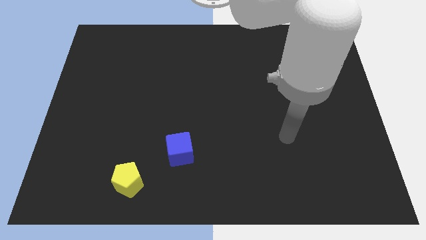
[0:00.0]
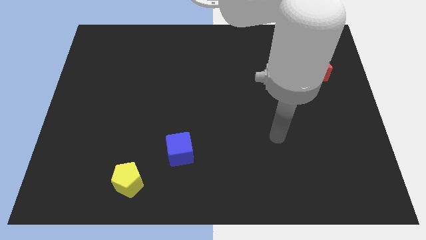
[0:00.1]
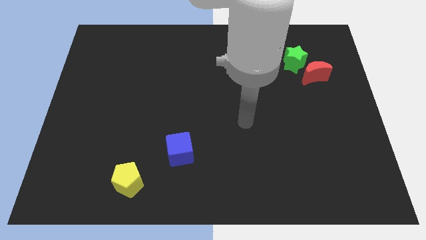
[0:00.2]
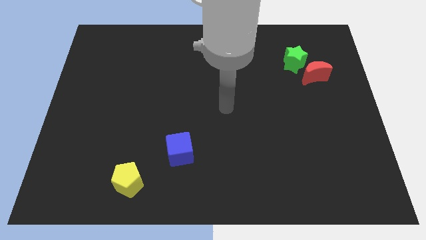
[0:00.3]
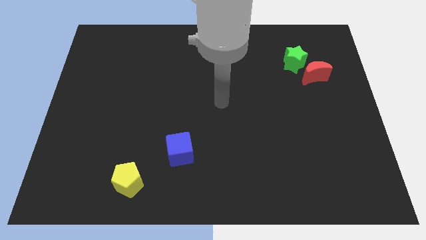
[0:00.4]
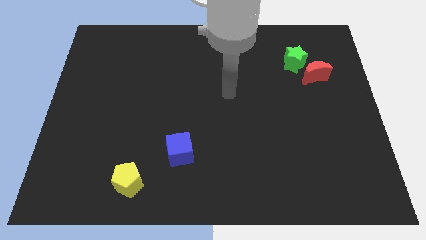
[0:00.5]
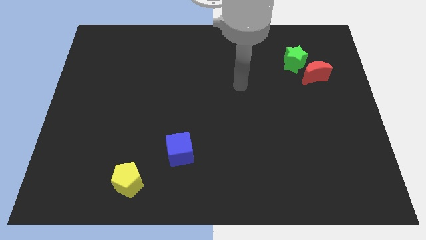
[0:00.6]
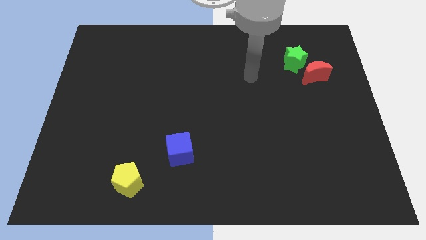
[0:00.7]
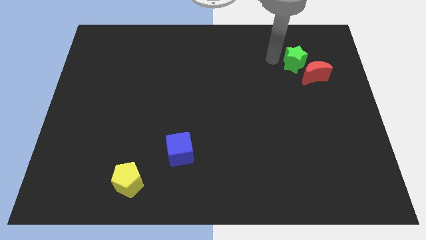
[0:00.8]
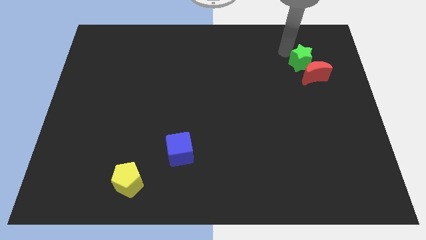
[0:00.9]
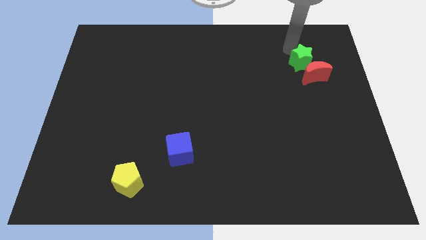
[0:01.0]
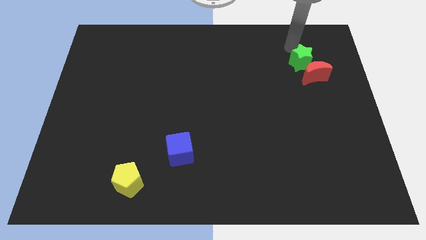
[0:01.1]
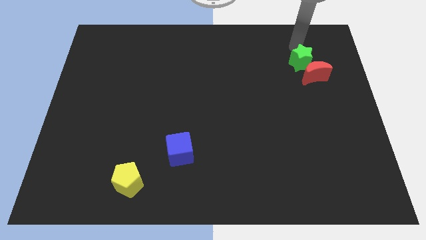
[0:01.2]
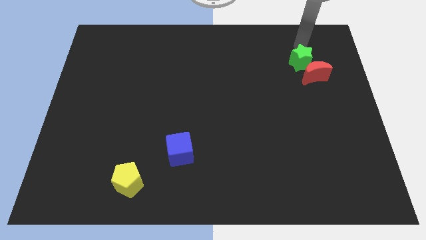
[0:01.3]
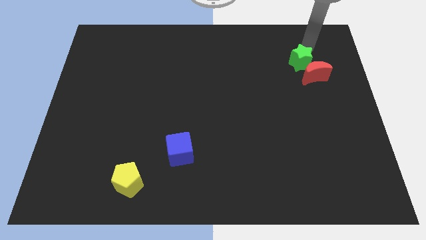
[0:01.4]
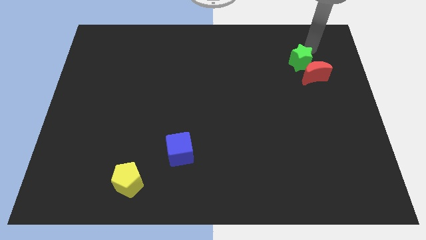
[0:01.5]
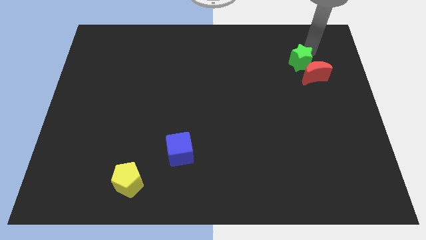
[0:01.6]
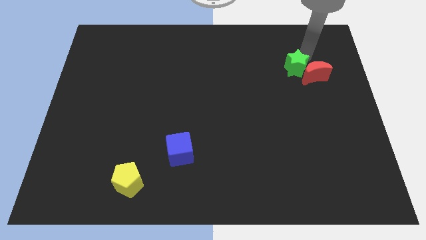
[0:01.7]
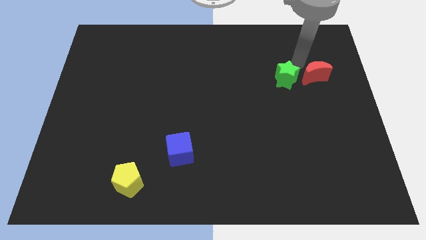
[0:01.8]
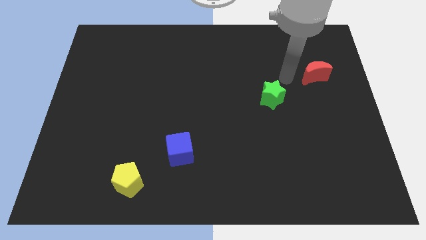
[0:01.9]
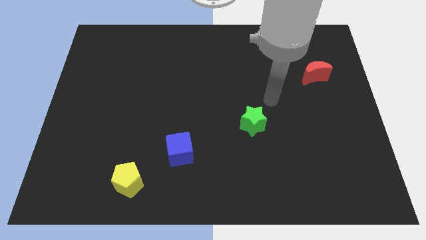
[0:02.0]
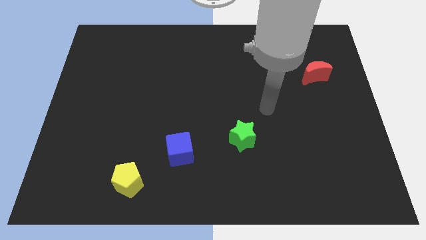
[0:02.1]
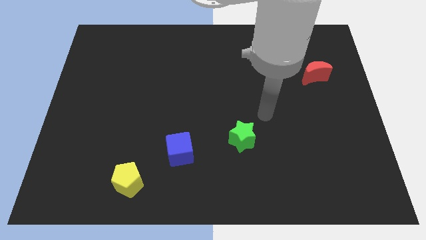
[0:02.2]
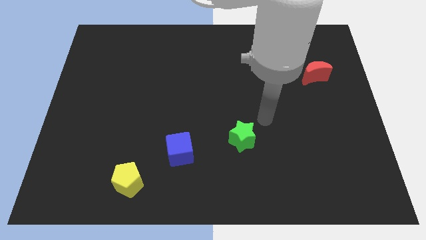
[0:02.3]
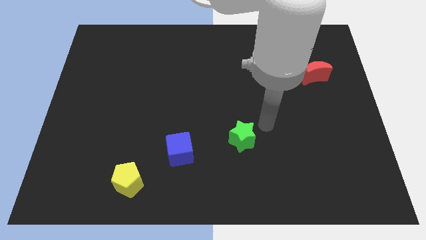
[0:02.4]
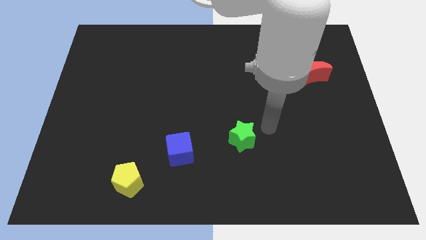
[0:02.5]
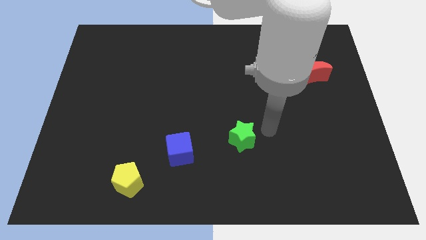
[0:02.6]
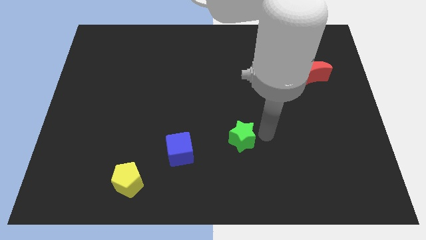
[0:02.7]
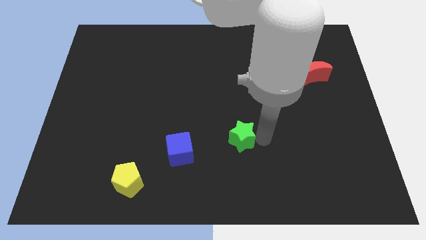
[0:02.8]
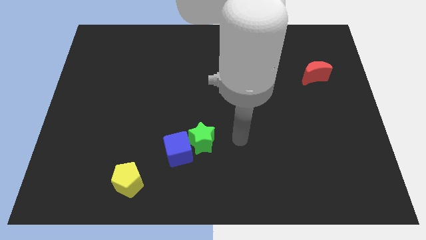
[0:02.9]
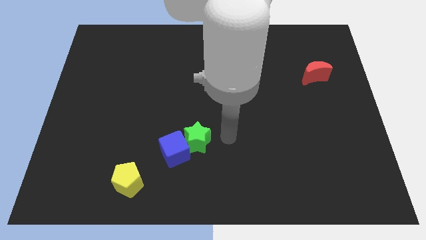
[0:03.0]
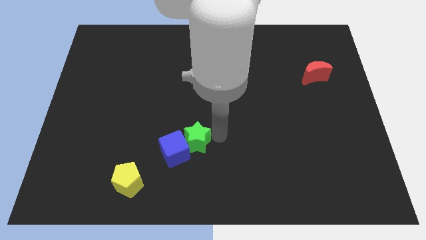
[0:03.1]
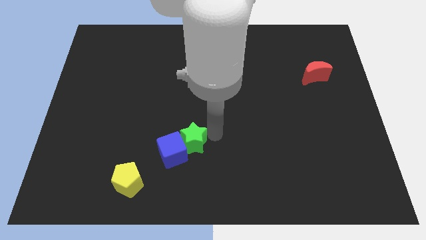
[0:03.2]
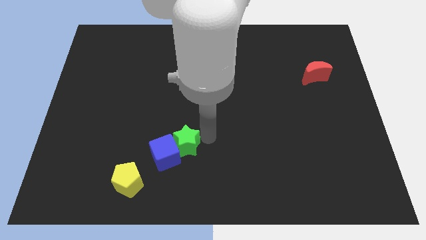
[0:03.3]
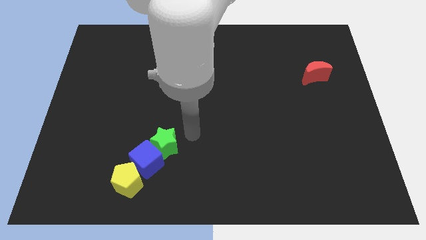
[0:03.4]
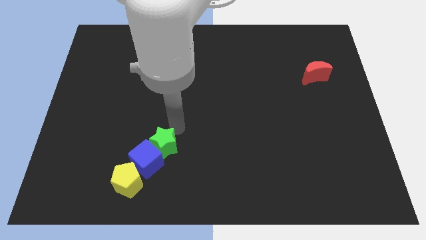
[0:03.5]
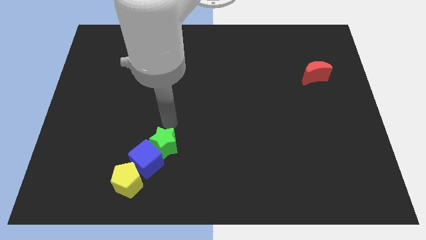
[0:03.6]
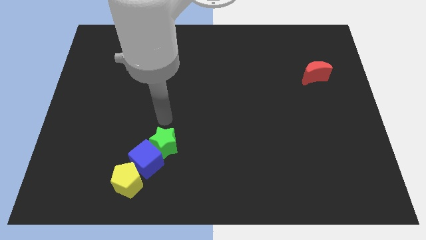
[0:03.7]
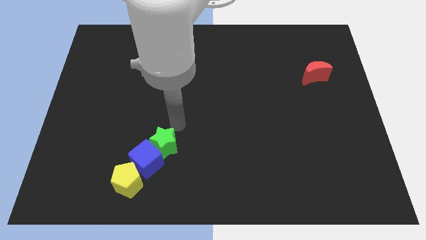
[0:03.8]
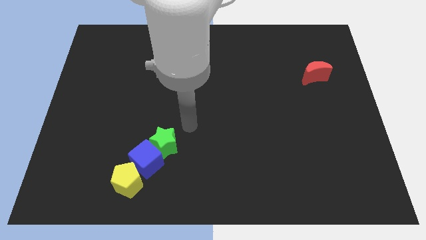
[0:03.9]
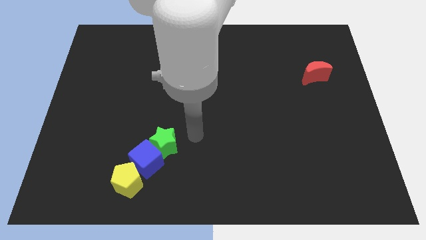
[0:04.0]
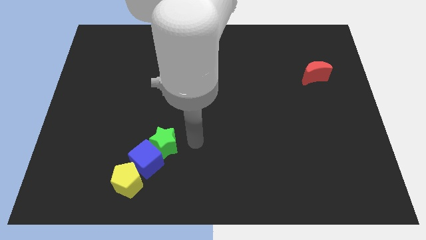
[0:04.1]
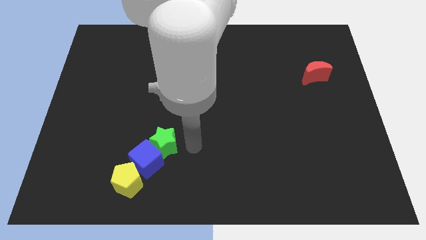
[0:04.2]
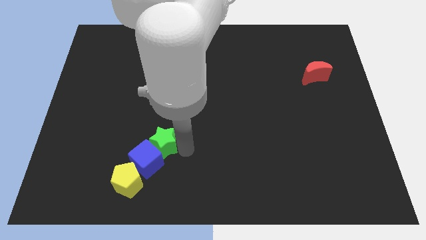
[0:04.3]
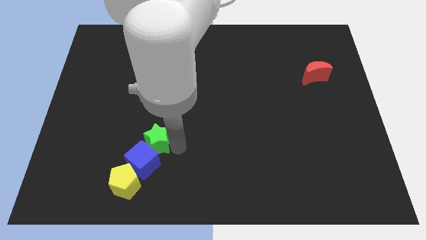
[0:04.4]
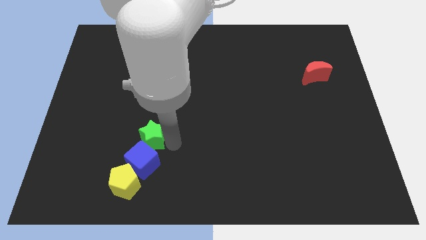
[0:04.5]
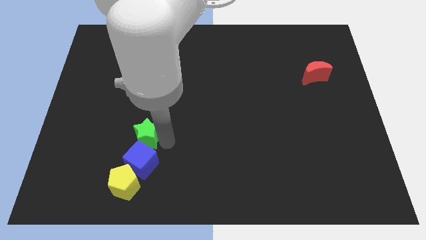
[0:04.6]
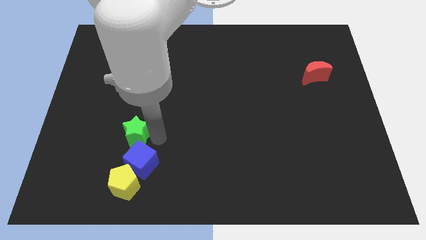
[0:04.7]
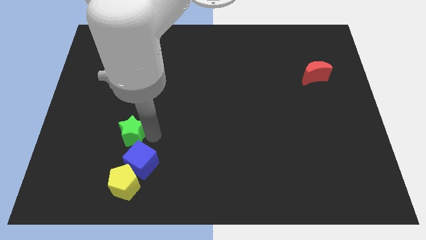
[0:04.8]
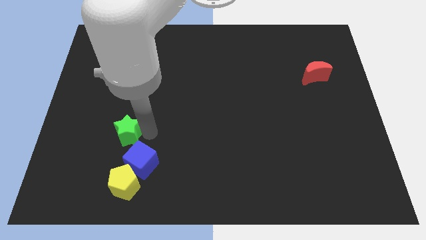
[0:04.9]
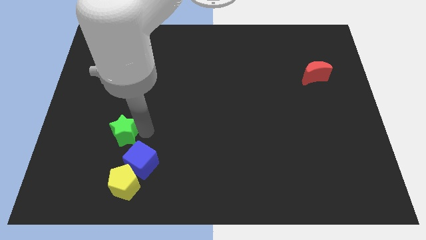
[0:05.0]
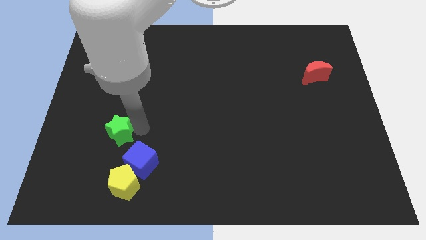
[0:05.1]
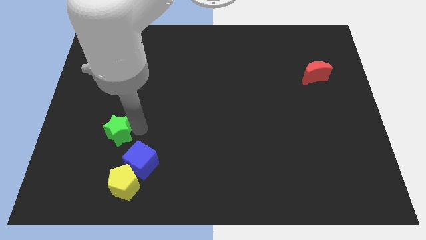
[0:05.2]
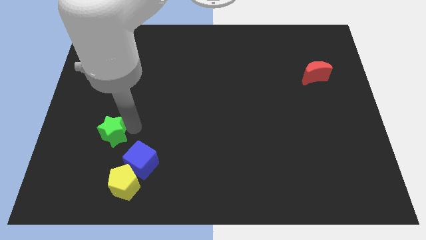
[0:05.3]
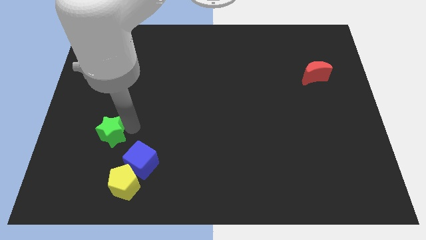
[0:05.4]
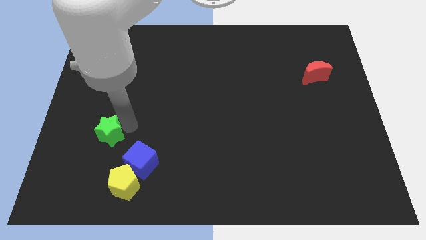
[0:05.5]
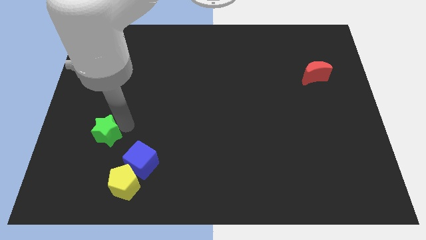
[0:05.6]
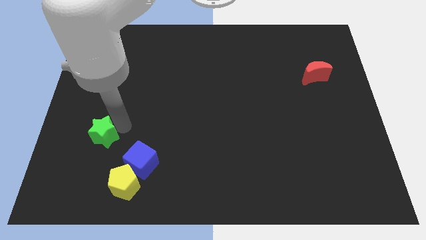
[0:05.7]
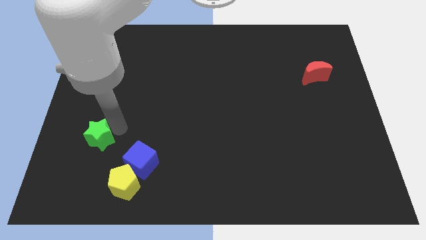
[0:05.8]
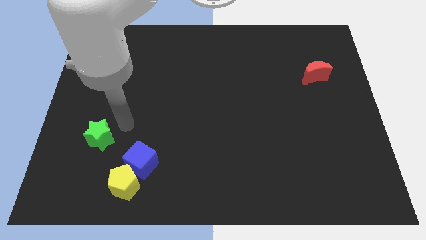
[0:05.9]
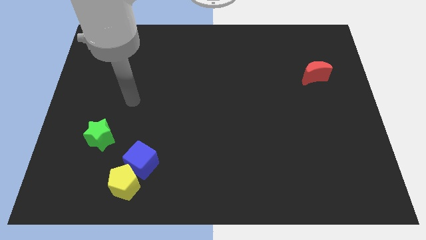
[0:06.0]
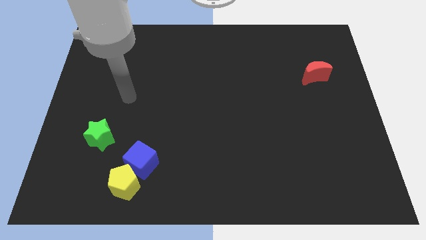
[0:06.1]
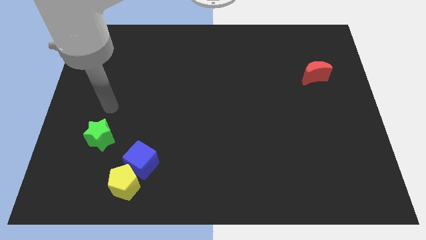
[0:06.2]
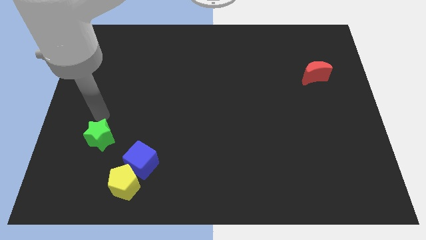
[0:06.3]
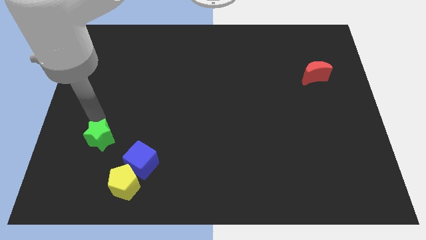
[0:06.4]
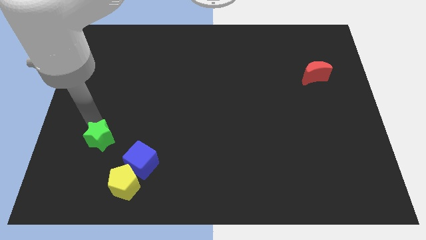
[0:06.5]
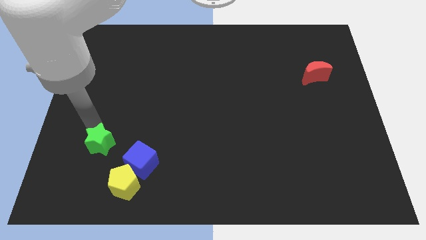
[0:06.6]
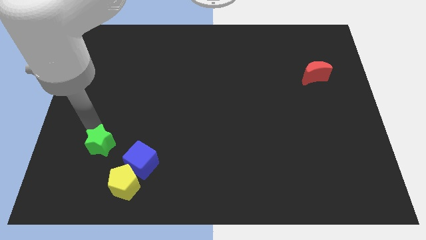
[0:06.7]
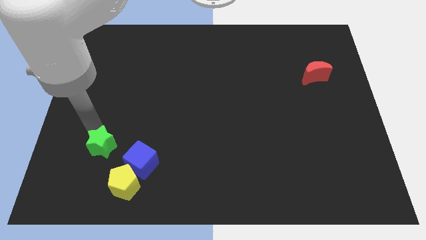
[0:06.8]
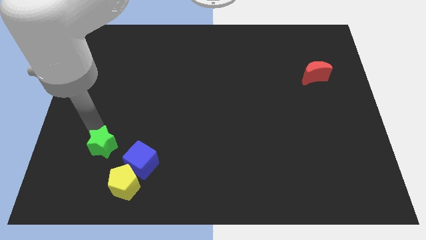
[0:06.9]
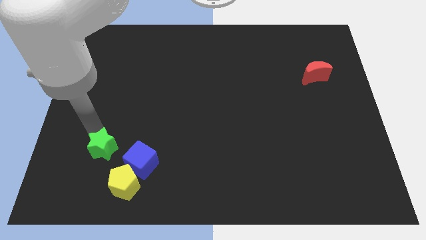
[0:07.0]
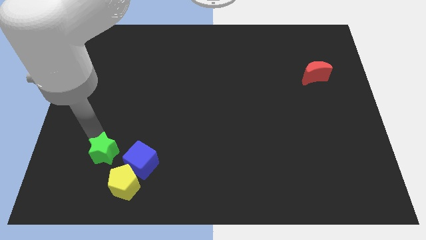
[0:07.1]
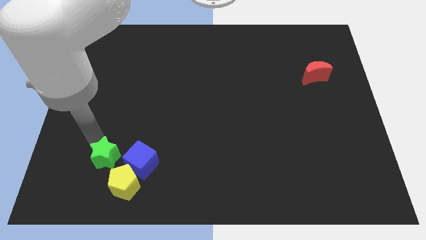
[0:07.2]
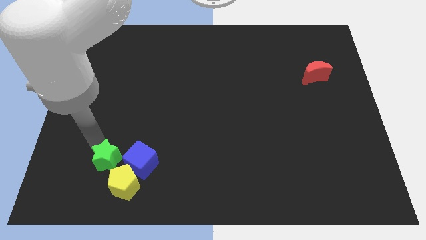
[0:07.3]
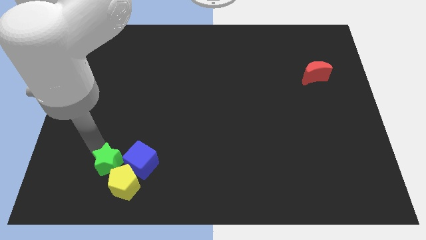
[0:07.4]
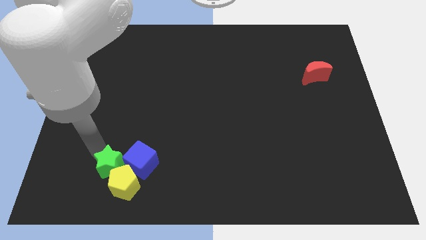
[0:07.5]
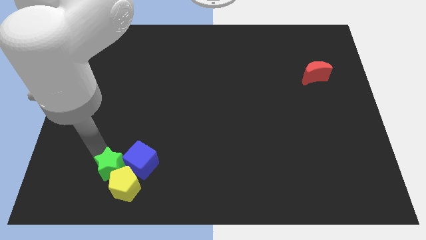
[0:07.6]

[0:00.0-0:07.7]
move the star next to the yellow block

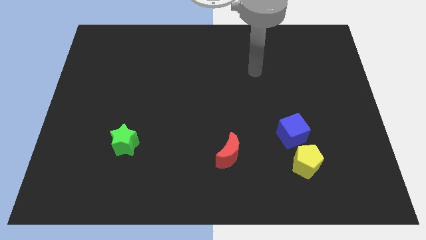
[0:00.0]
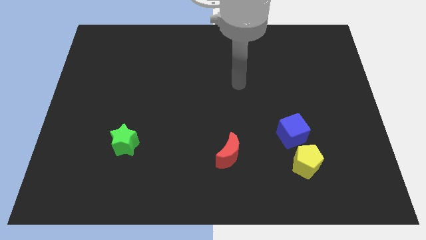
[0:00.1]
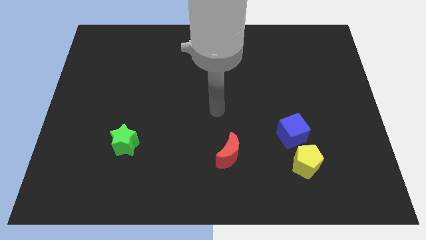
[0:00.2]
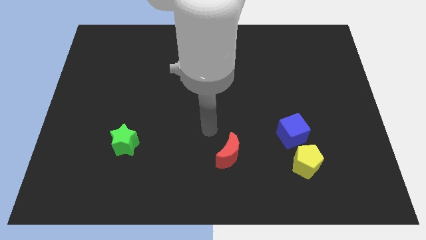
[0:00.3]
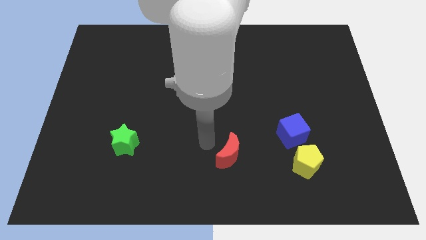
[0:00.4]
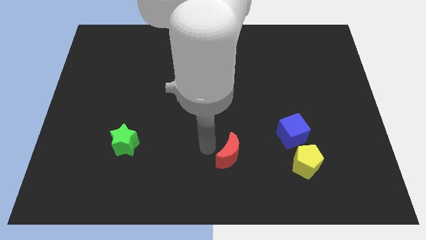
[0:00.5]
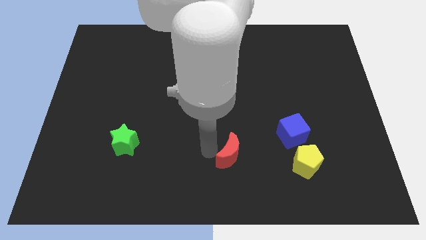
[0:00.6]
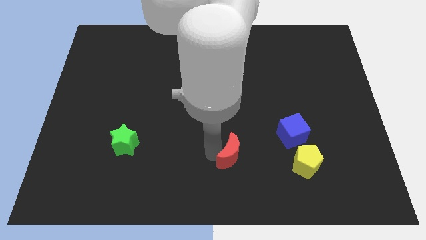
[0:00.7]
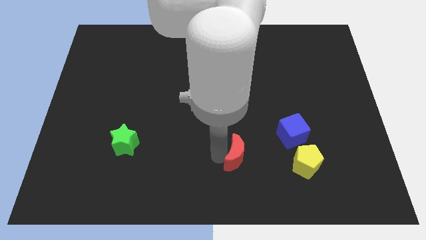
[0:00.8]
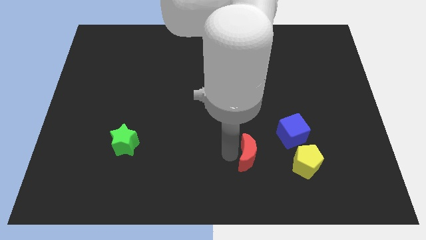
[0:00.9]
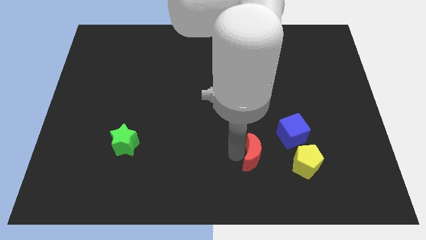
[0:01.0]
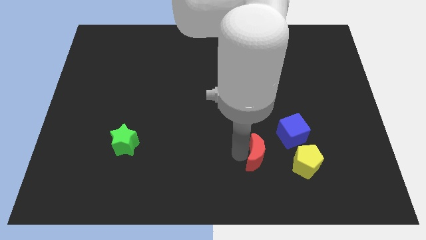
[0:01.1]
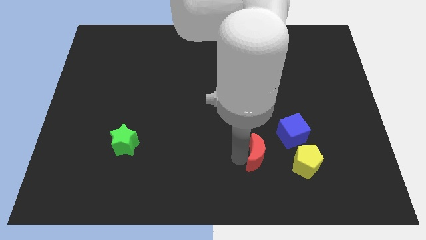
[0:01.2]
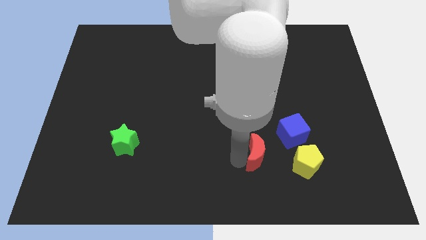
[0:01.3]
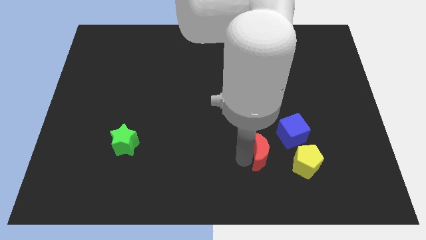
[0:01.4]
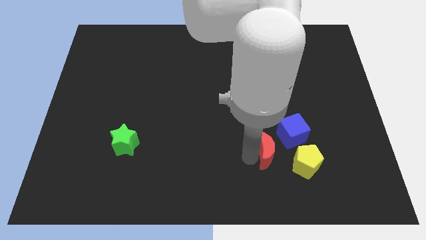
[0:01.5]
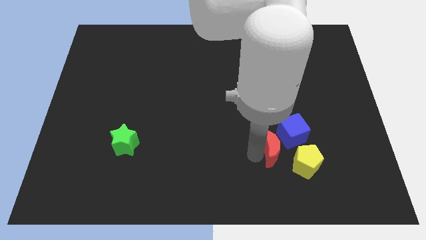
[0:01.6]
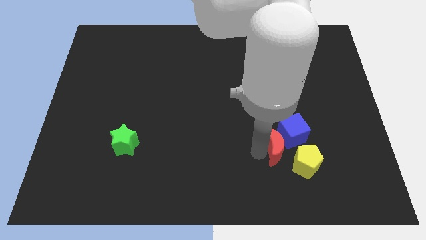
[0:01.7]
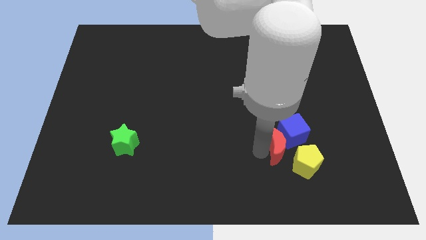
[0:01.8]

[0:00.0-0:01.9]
slide the moon next to the blue block
